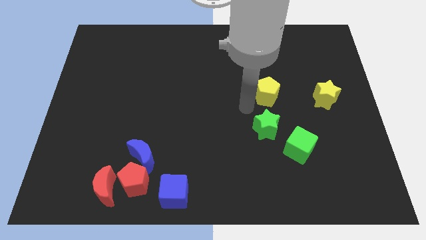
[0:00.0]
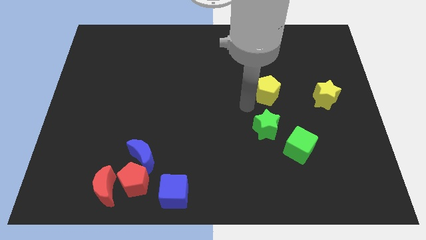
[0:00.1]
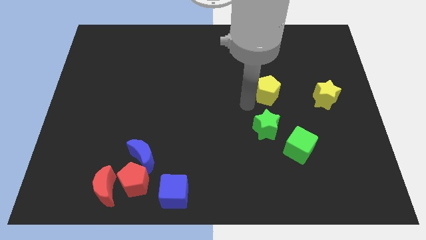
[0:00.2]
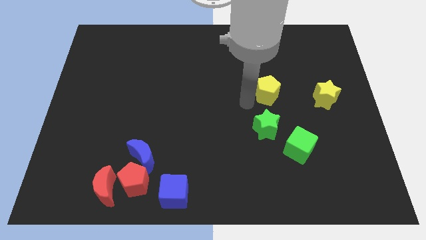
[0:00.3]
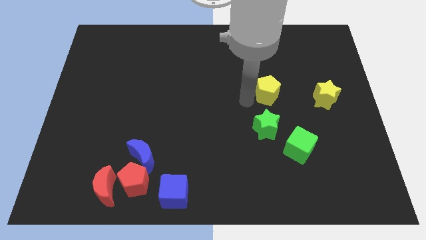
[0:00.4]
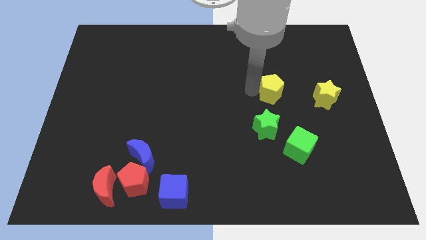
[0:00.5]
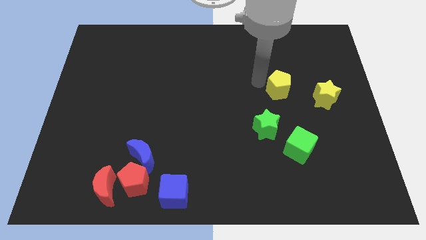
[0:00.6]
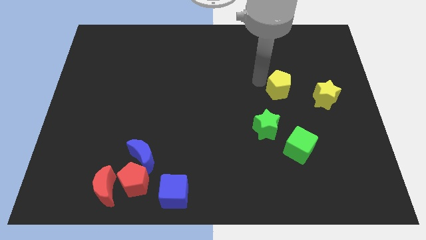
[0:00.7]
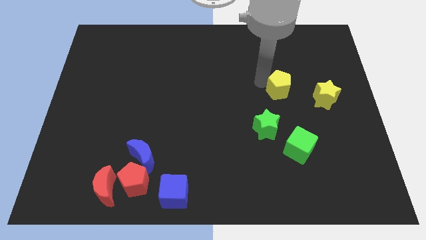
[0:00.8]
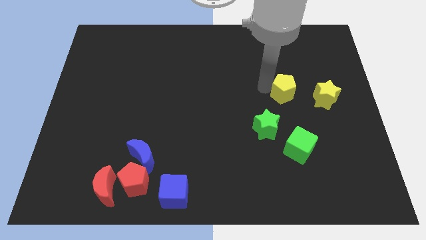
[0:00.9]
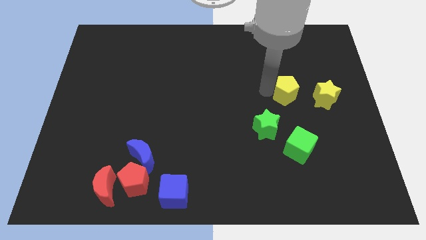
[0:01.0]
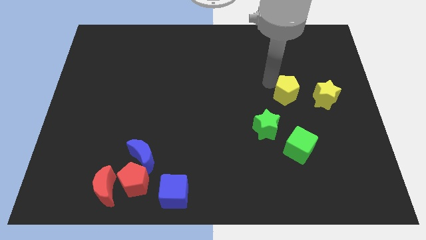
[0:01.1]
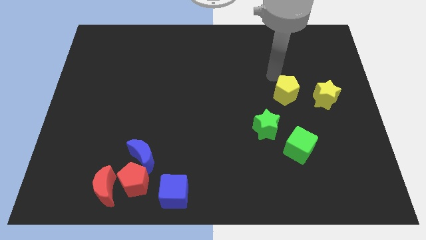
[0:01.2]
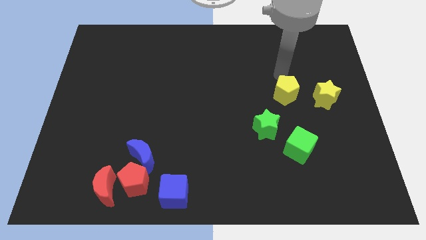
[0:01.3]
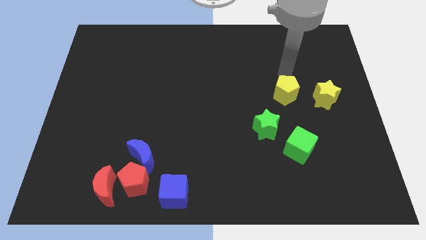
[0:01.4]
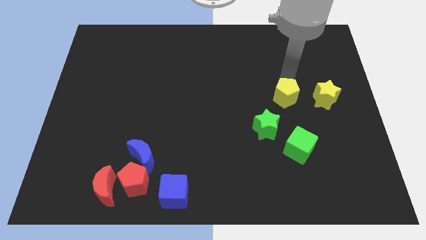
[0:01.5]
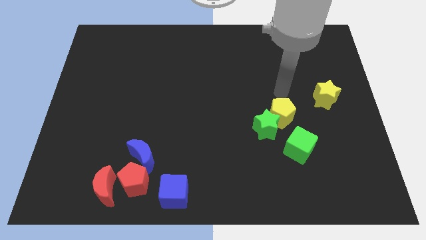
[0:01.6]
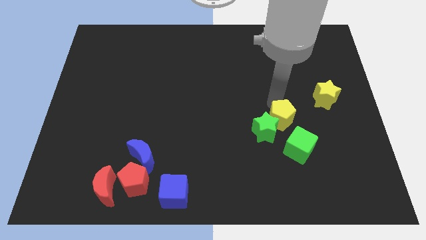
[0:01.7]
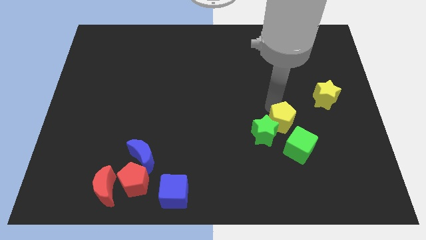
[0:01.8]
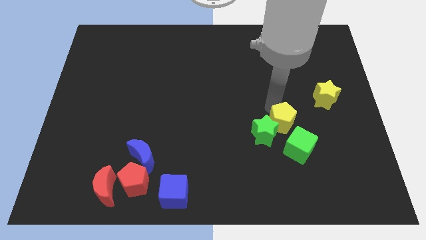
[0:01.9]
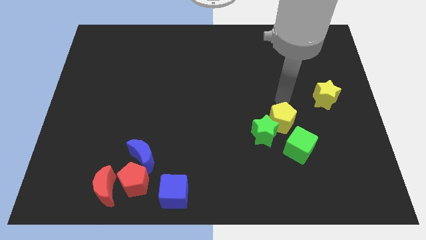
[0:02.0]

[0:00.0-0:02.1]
move the yellow pentagon to the diagonally top left of the green cube

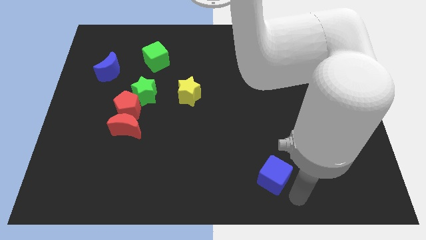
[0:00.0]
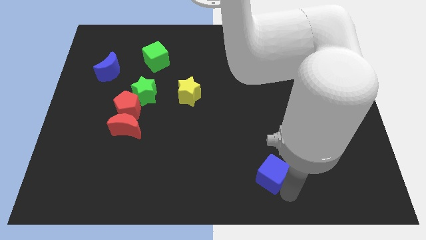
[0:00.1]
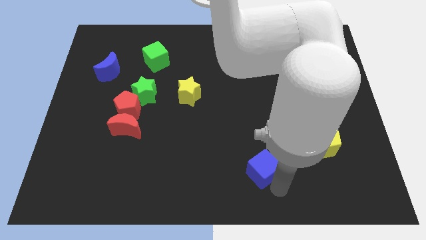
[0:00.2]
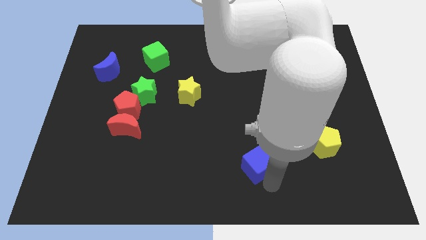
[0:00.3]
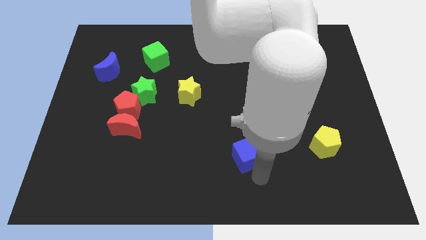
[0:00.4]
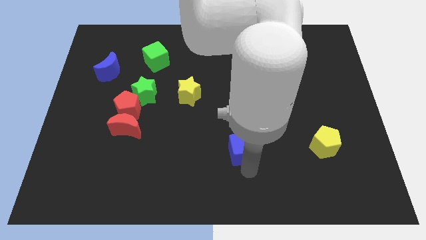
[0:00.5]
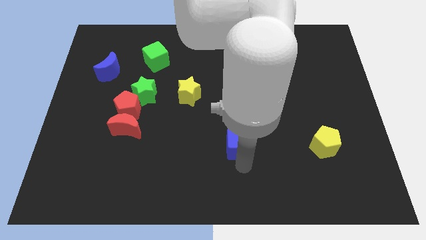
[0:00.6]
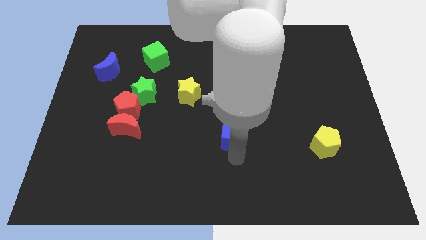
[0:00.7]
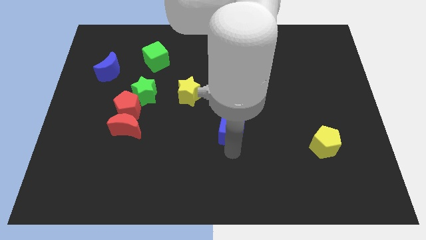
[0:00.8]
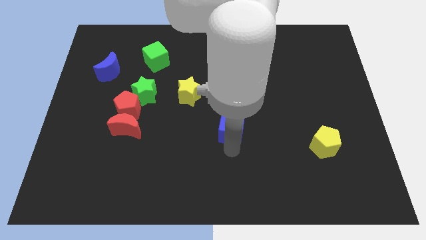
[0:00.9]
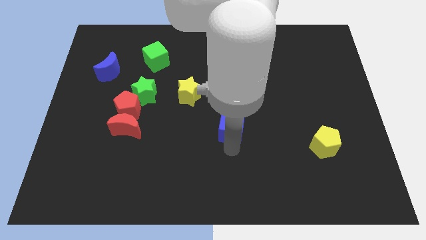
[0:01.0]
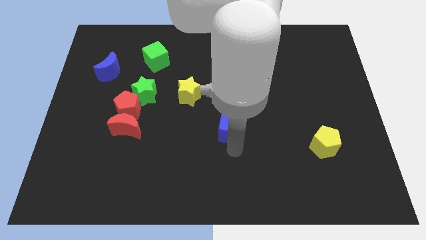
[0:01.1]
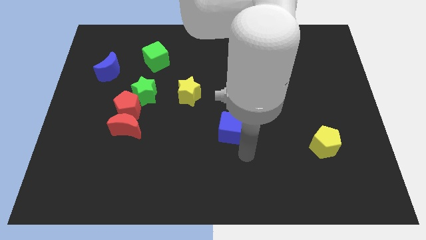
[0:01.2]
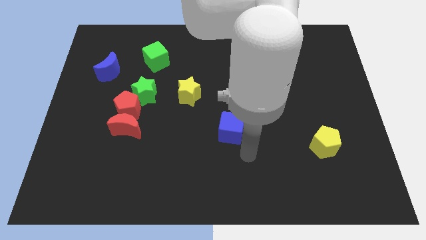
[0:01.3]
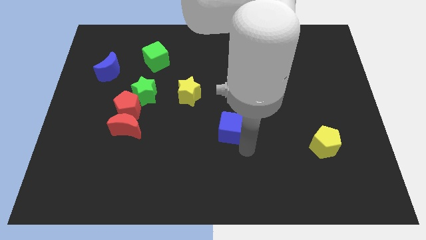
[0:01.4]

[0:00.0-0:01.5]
push the blue cube towards the center of the board

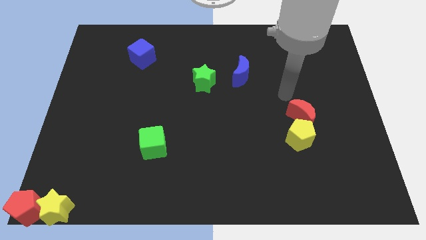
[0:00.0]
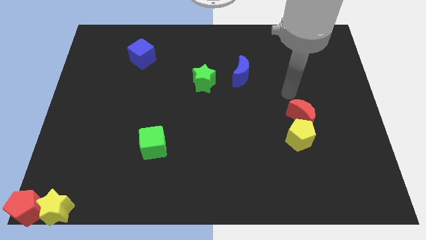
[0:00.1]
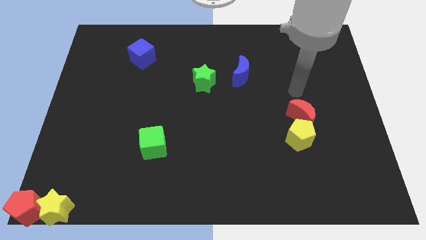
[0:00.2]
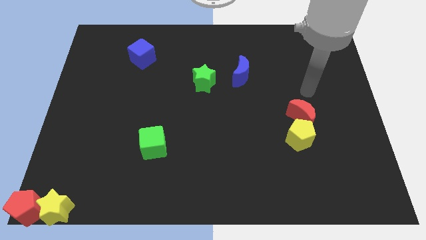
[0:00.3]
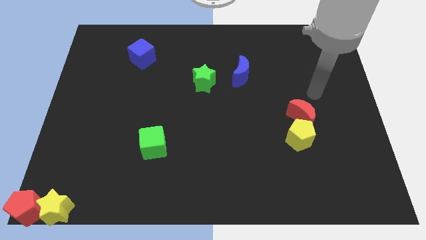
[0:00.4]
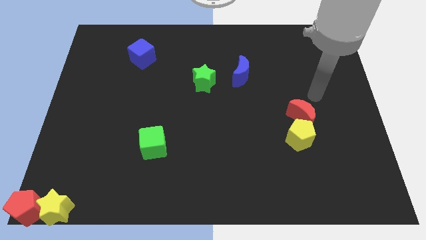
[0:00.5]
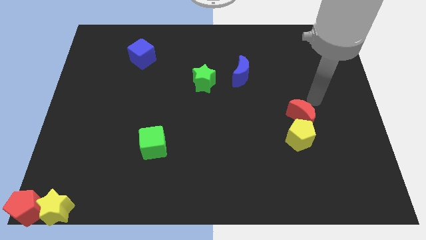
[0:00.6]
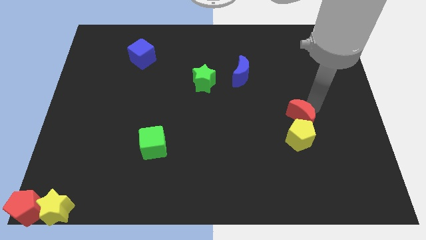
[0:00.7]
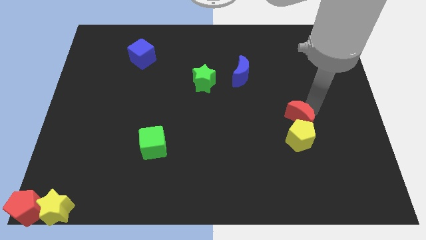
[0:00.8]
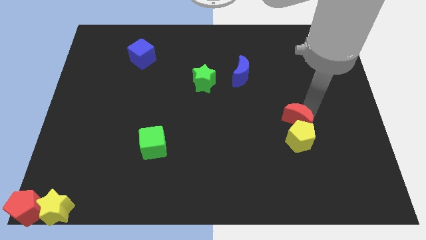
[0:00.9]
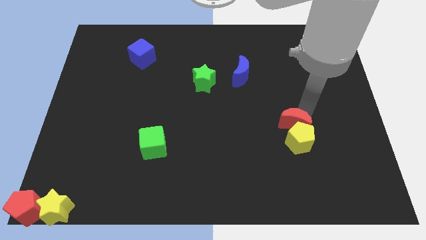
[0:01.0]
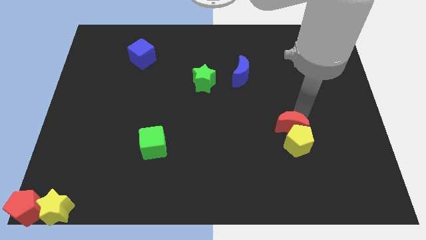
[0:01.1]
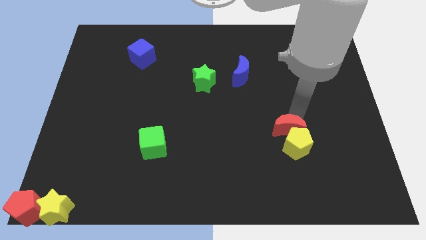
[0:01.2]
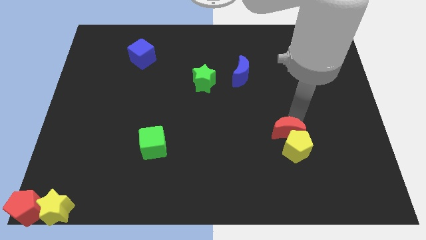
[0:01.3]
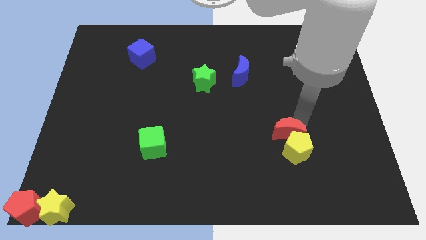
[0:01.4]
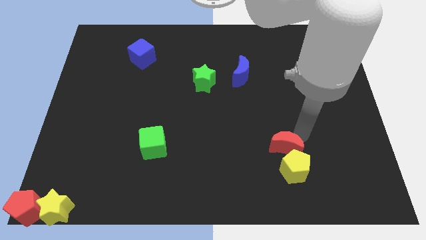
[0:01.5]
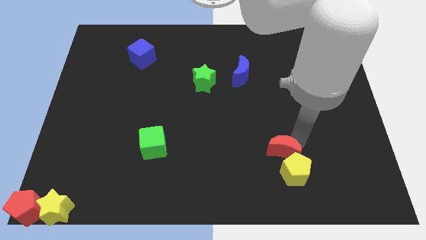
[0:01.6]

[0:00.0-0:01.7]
push both red crescent and yellow pentagon together towards bottom side of the board

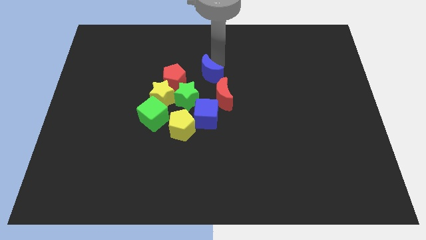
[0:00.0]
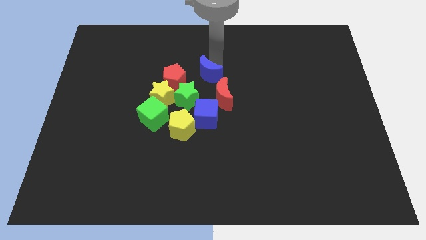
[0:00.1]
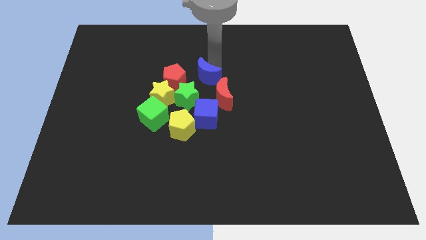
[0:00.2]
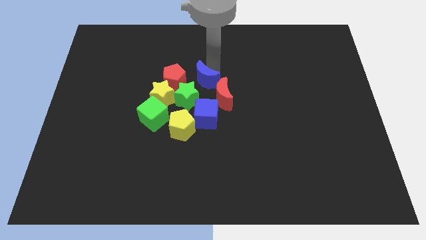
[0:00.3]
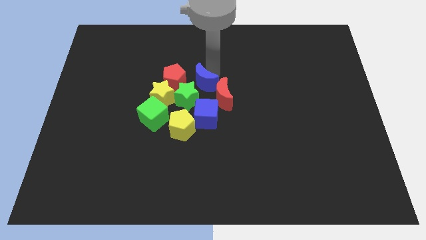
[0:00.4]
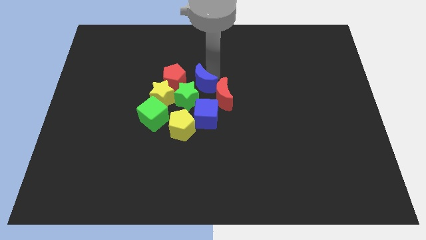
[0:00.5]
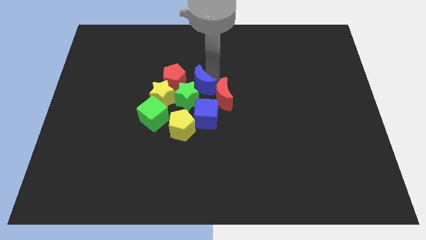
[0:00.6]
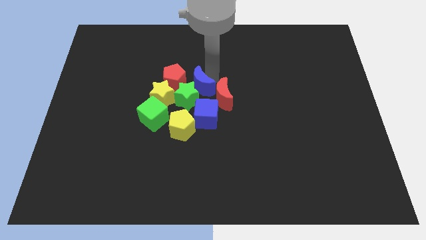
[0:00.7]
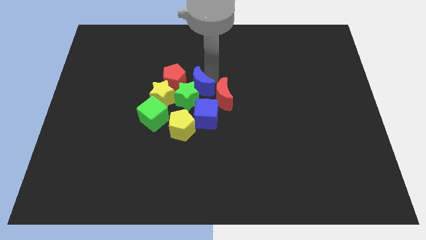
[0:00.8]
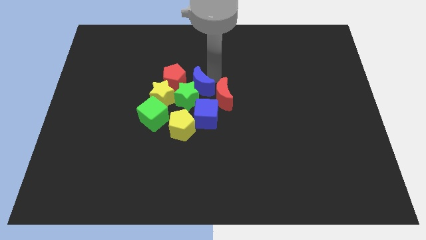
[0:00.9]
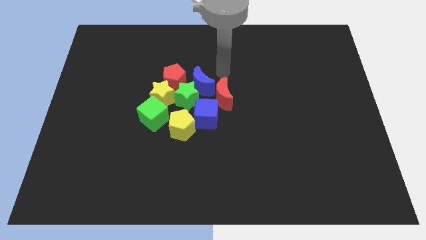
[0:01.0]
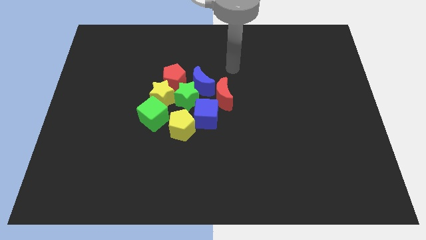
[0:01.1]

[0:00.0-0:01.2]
push blue moon into green star at the center

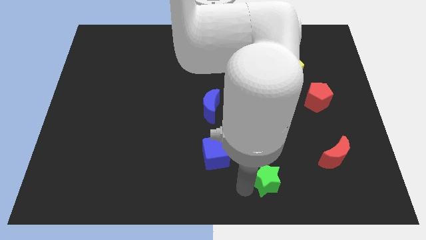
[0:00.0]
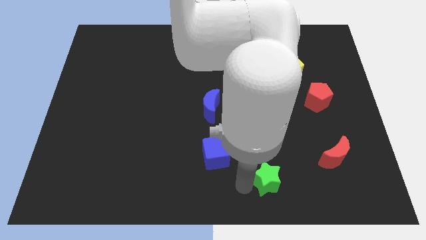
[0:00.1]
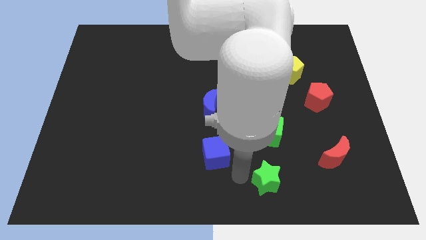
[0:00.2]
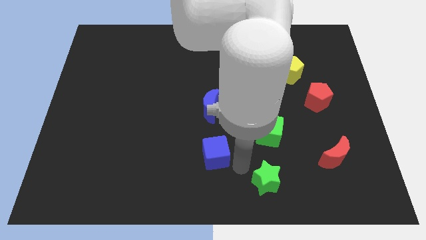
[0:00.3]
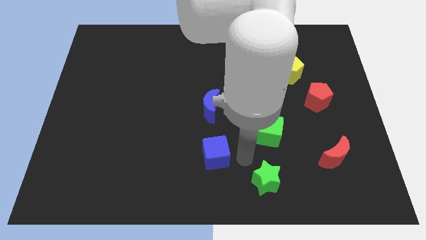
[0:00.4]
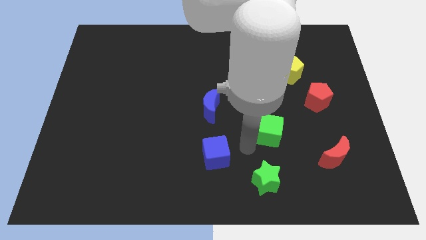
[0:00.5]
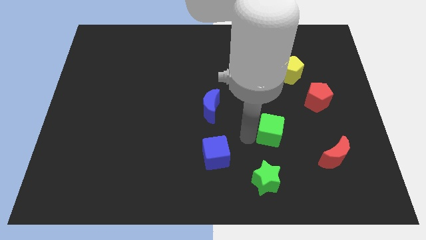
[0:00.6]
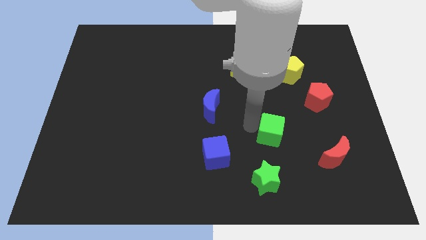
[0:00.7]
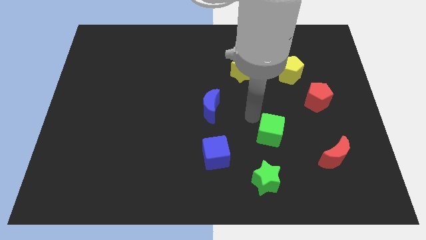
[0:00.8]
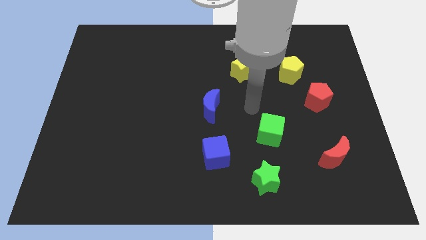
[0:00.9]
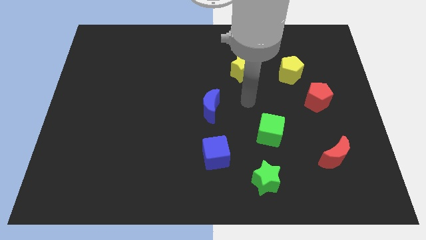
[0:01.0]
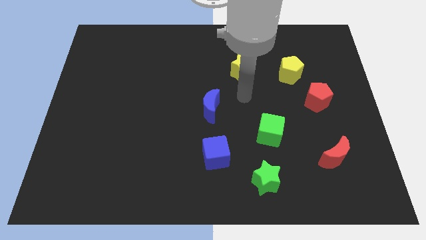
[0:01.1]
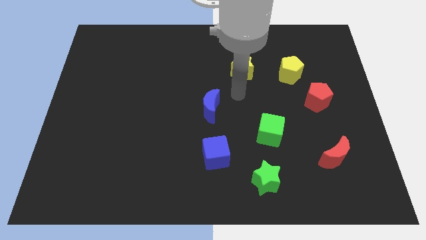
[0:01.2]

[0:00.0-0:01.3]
move your arm away from the left side of the green star

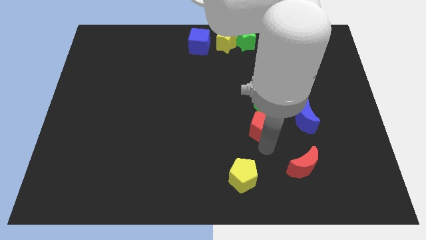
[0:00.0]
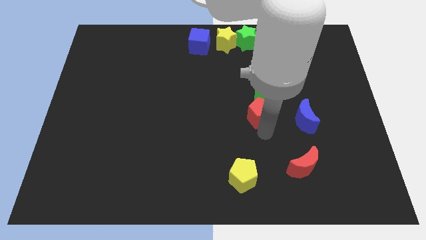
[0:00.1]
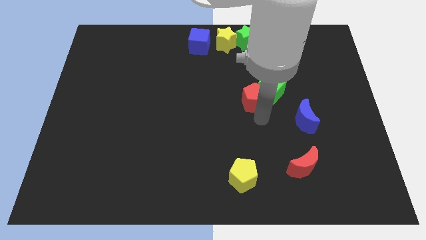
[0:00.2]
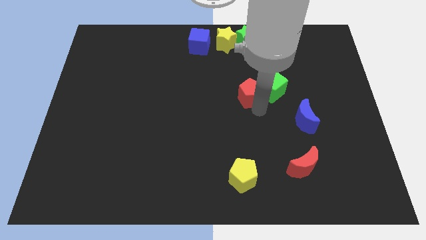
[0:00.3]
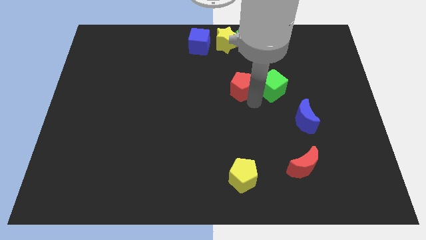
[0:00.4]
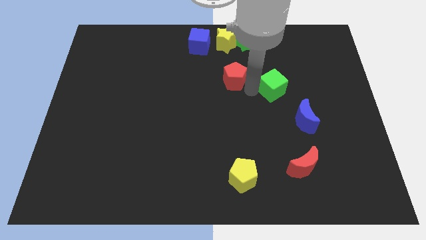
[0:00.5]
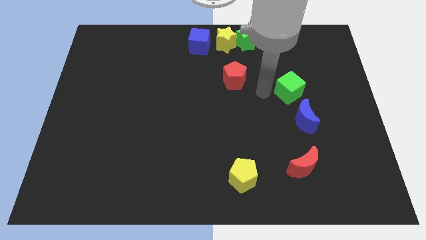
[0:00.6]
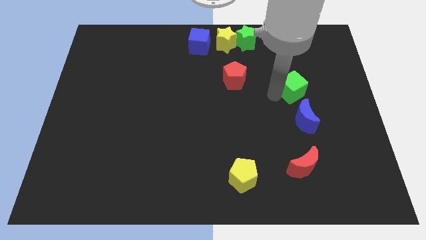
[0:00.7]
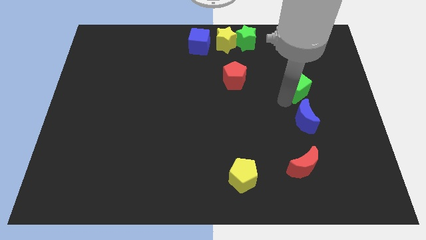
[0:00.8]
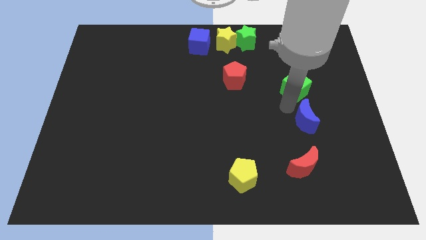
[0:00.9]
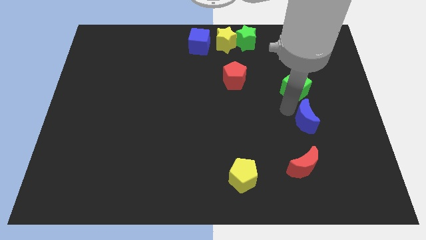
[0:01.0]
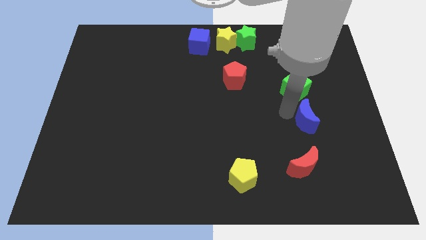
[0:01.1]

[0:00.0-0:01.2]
place the red pentagon below the yellow star
